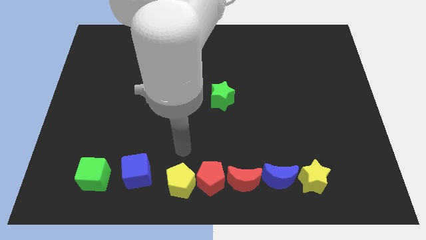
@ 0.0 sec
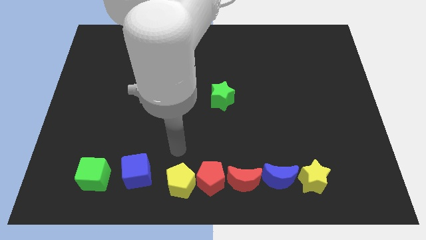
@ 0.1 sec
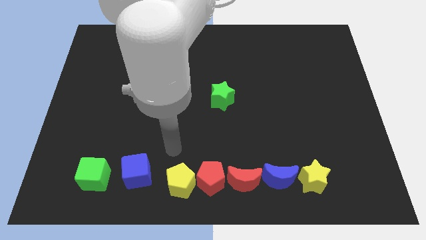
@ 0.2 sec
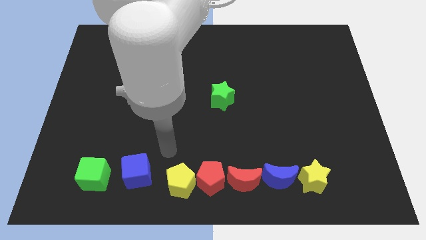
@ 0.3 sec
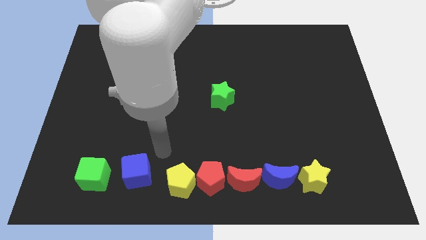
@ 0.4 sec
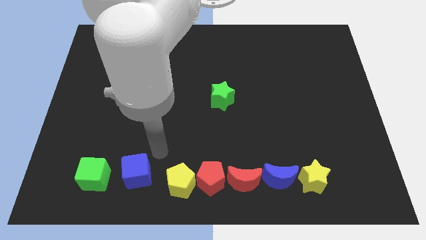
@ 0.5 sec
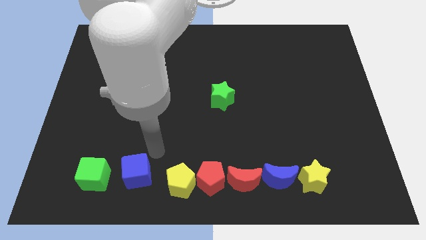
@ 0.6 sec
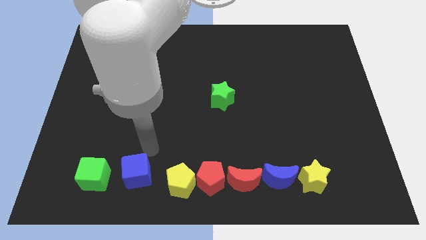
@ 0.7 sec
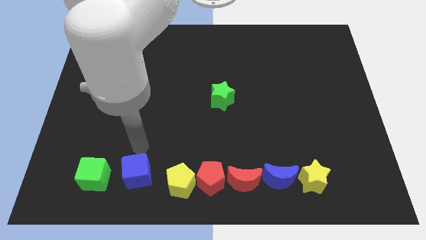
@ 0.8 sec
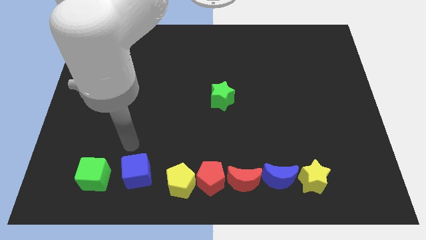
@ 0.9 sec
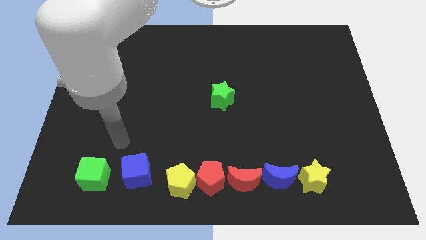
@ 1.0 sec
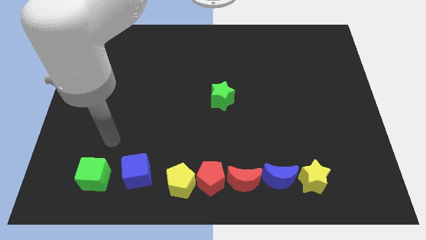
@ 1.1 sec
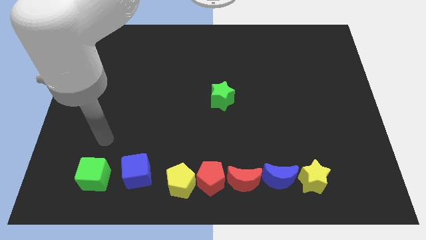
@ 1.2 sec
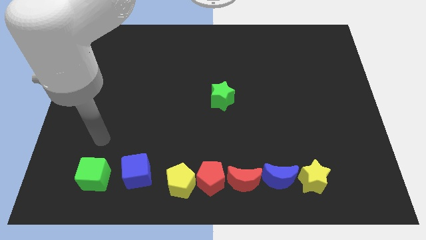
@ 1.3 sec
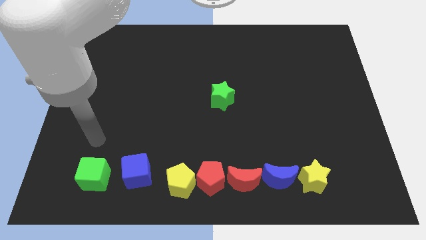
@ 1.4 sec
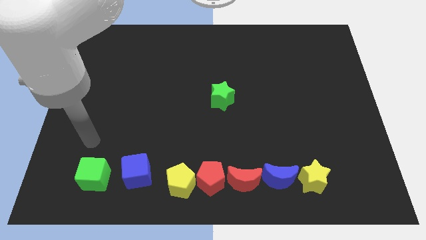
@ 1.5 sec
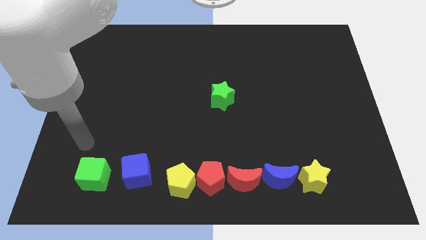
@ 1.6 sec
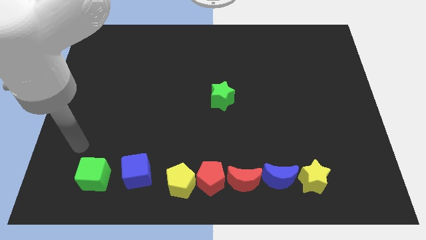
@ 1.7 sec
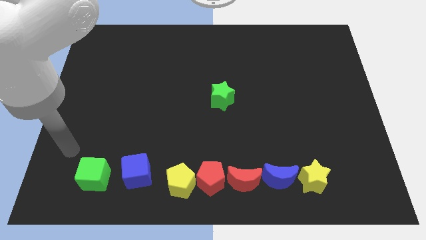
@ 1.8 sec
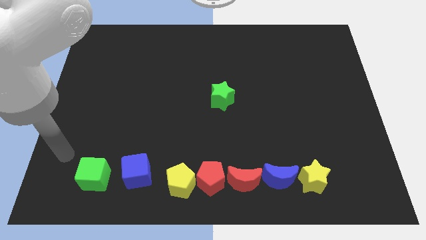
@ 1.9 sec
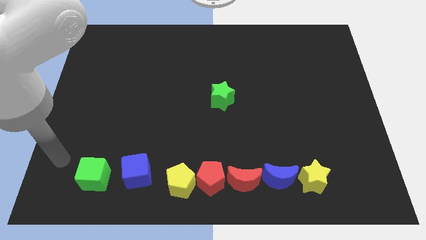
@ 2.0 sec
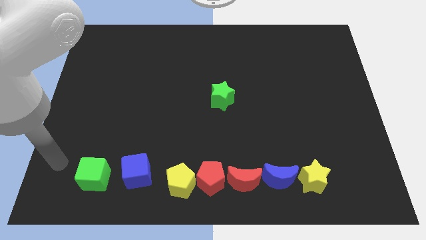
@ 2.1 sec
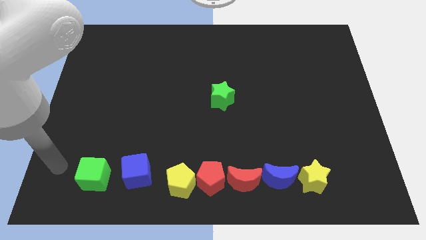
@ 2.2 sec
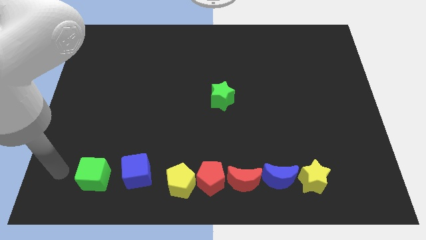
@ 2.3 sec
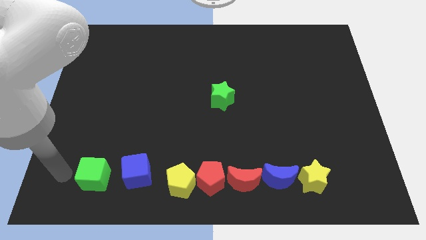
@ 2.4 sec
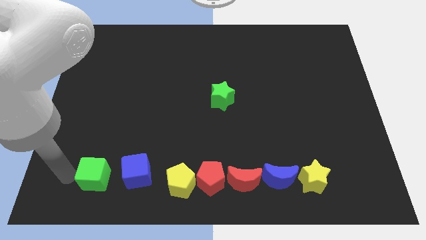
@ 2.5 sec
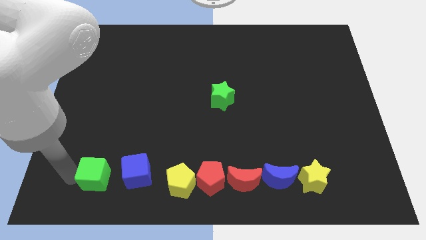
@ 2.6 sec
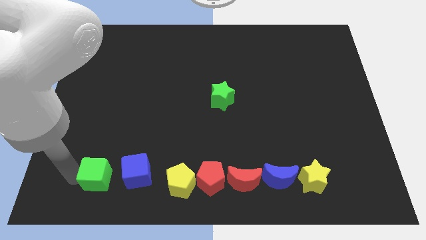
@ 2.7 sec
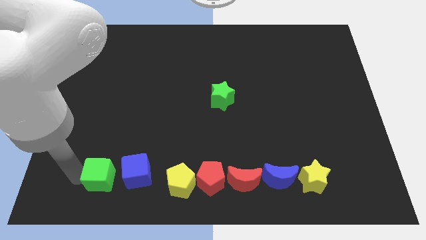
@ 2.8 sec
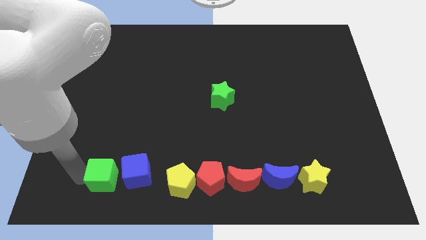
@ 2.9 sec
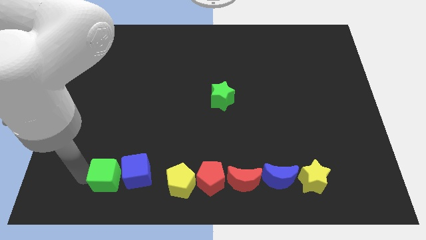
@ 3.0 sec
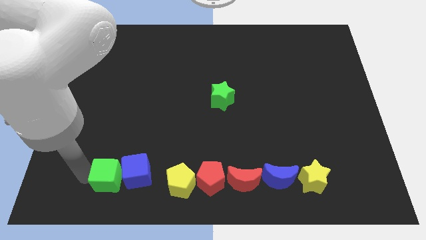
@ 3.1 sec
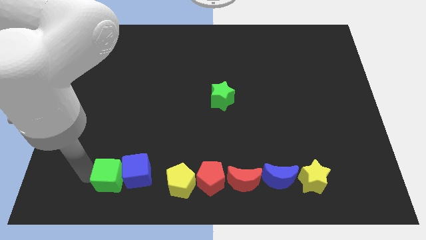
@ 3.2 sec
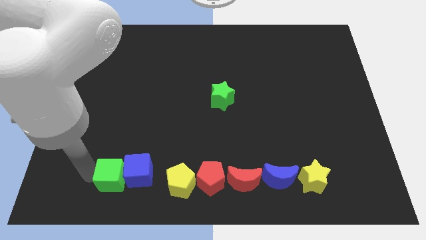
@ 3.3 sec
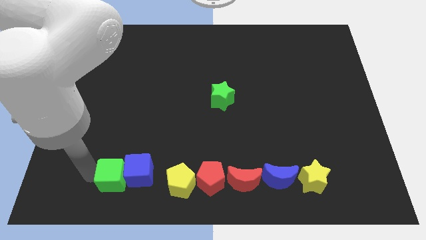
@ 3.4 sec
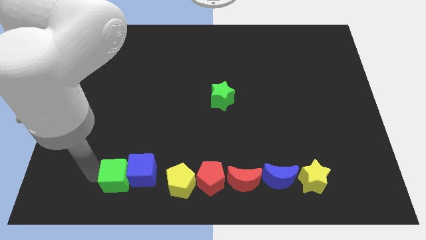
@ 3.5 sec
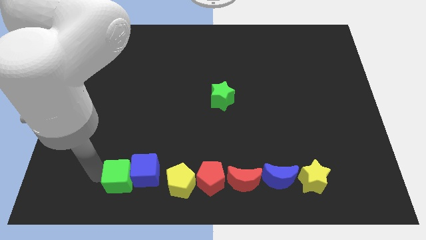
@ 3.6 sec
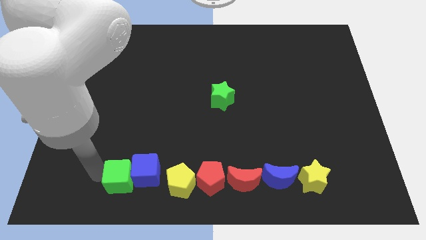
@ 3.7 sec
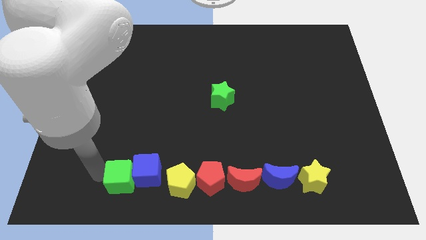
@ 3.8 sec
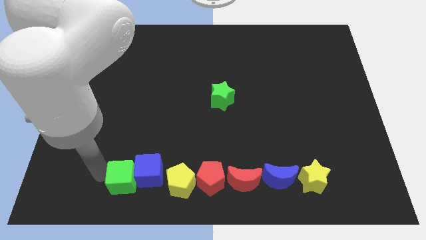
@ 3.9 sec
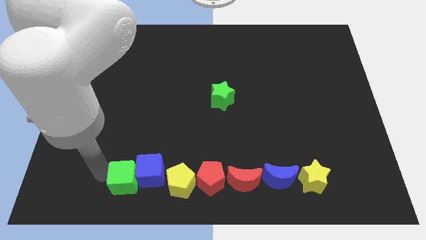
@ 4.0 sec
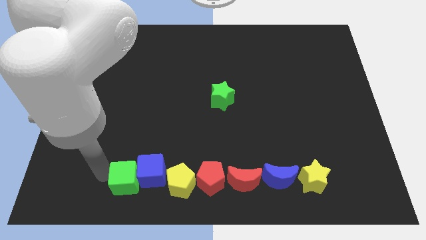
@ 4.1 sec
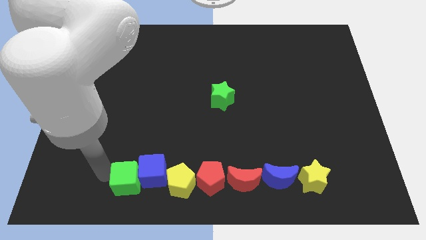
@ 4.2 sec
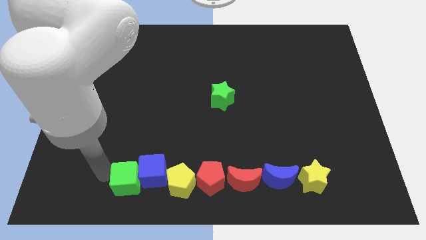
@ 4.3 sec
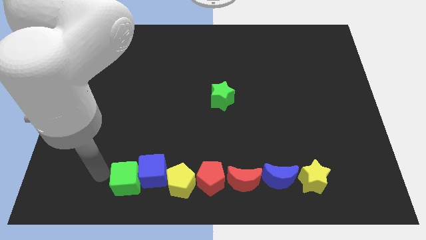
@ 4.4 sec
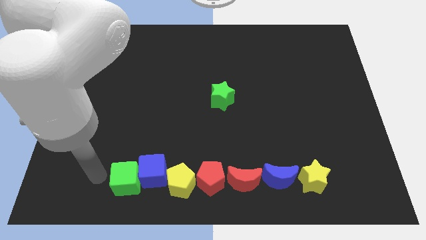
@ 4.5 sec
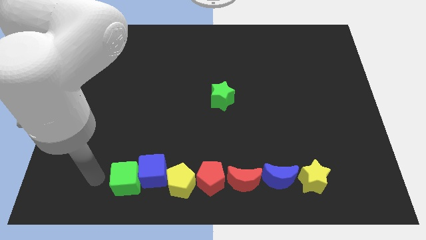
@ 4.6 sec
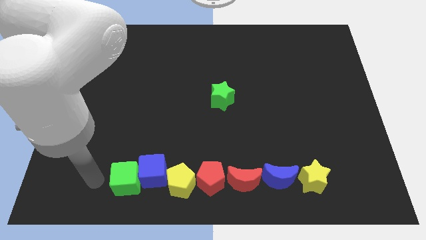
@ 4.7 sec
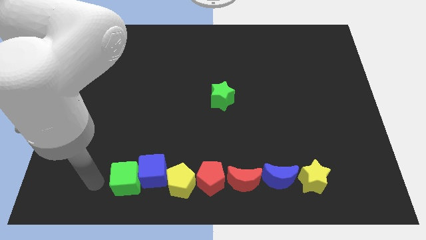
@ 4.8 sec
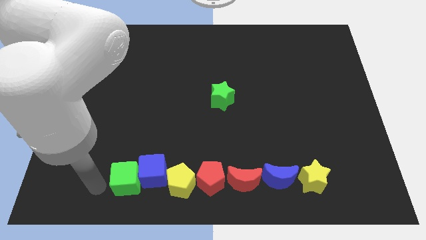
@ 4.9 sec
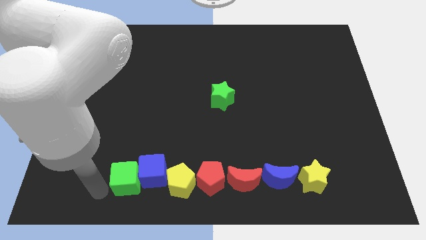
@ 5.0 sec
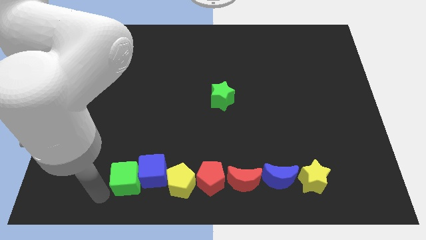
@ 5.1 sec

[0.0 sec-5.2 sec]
push the green cube and the blue cube to the right

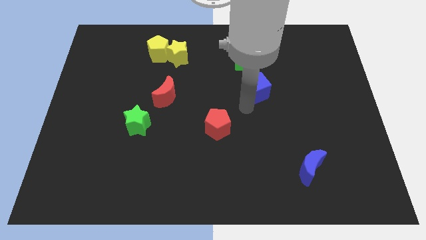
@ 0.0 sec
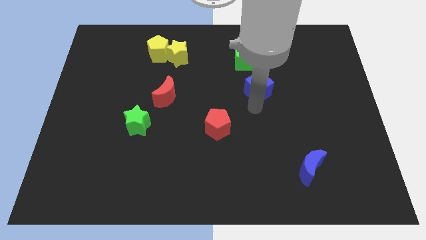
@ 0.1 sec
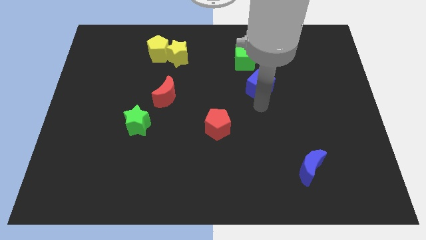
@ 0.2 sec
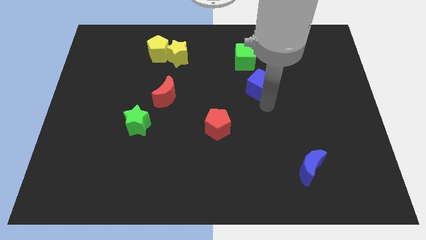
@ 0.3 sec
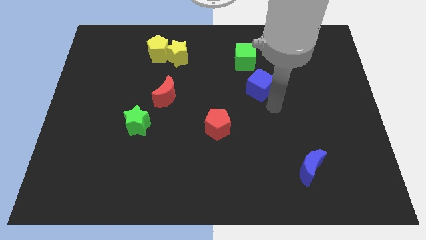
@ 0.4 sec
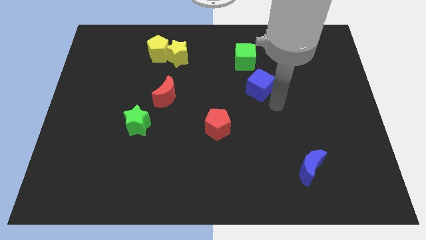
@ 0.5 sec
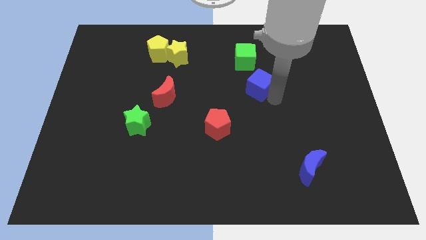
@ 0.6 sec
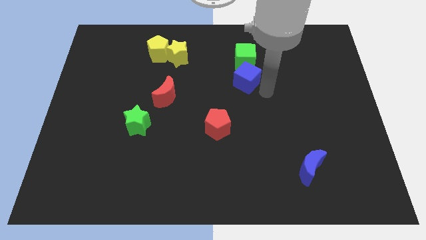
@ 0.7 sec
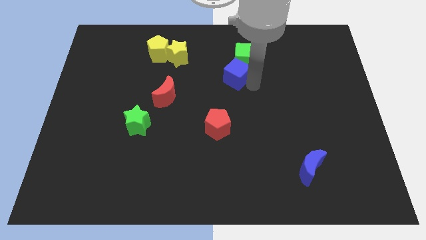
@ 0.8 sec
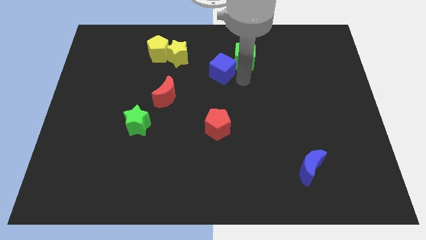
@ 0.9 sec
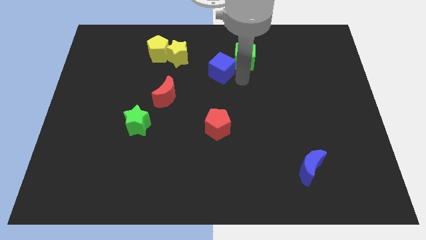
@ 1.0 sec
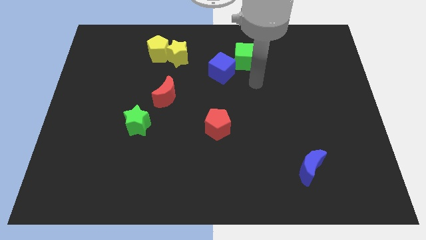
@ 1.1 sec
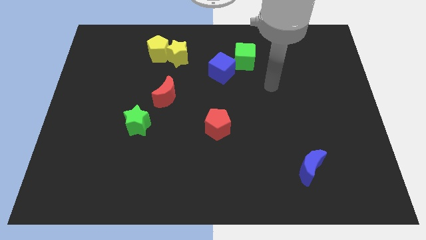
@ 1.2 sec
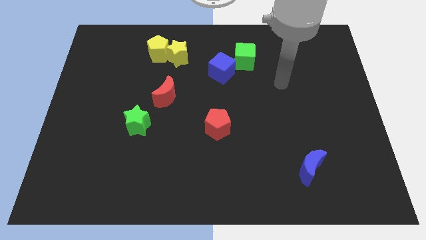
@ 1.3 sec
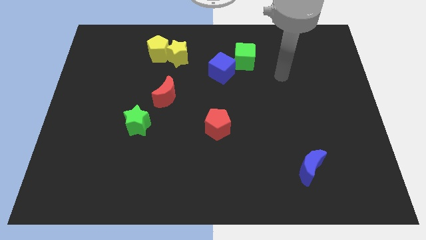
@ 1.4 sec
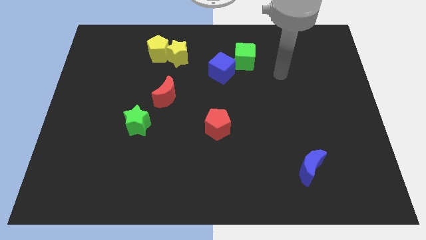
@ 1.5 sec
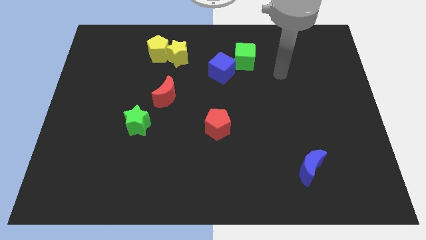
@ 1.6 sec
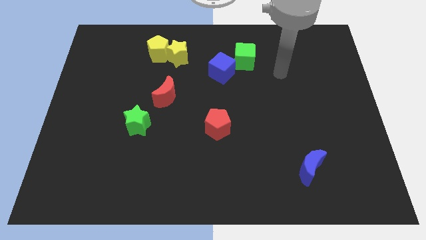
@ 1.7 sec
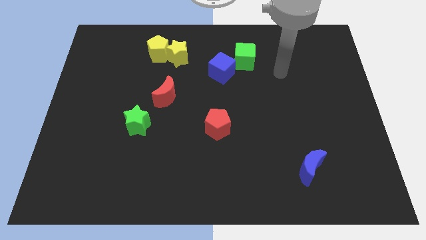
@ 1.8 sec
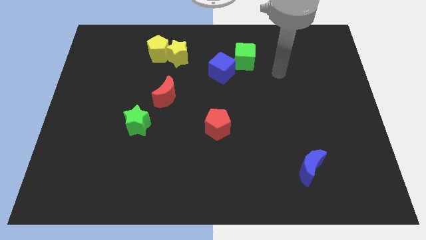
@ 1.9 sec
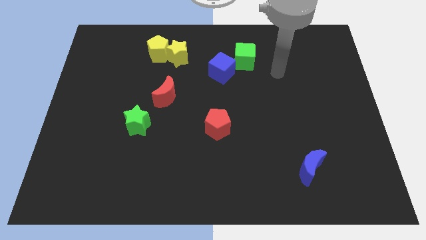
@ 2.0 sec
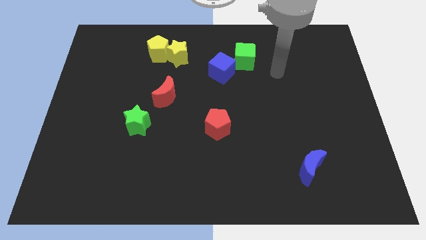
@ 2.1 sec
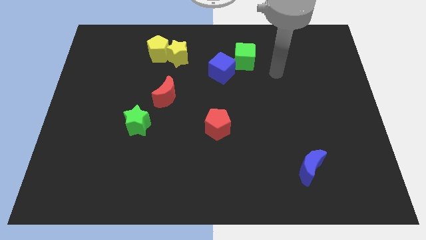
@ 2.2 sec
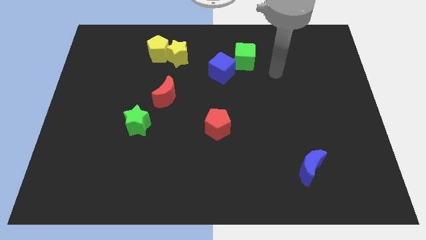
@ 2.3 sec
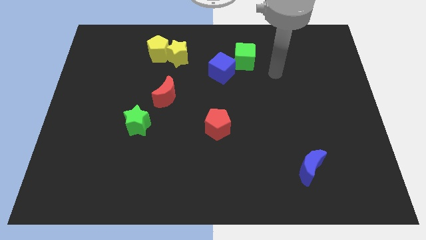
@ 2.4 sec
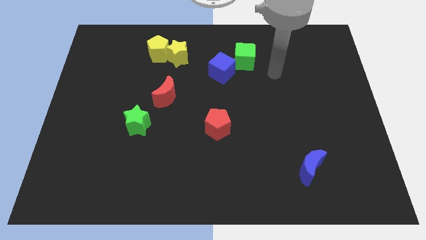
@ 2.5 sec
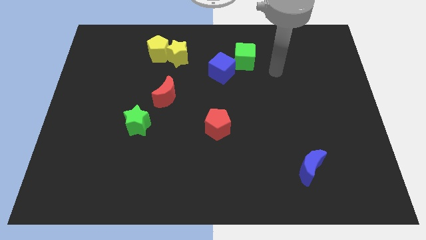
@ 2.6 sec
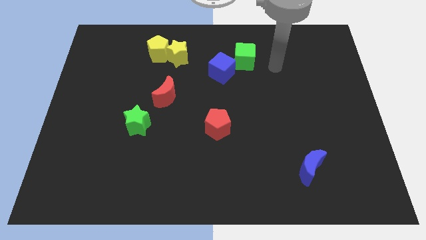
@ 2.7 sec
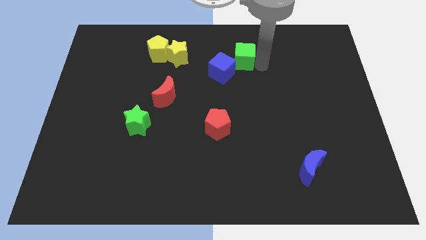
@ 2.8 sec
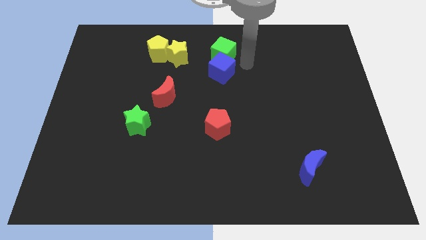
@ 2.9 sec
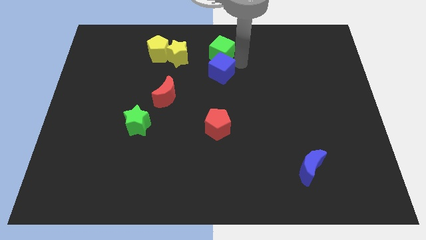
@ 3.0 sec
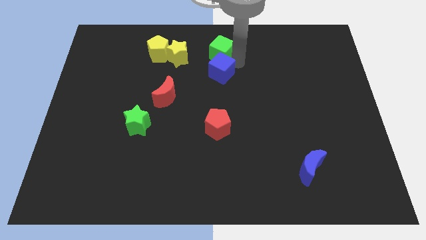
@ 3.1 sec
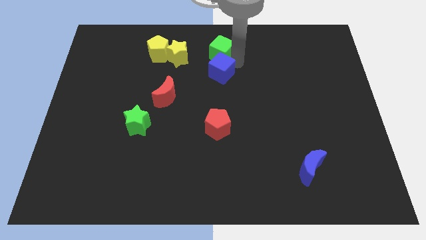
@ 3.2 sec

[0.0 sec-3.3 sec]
place the green cube and blue cube to the right of the yellow star

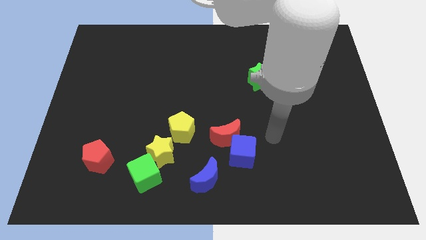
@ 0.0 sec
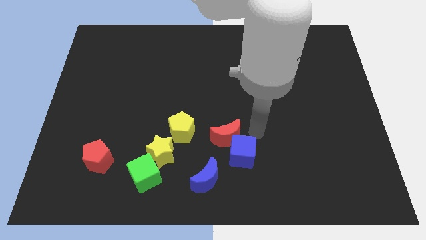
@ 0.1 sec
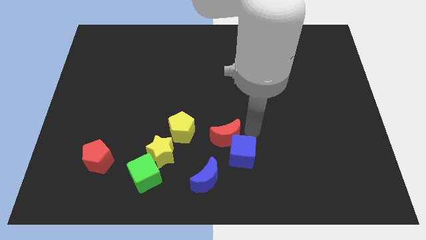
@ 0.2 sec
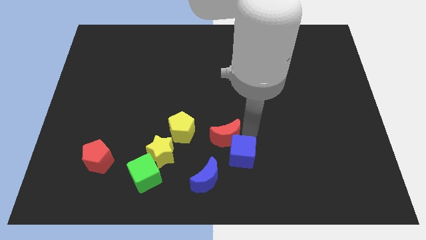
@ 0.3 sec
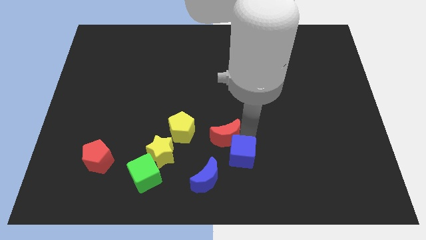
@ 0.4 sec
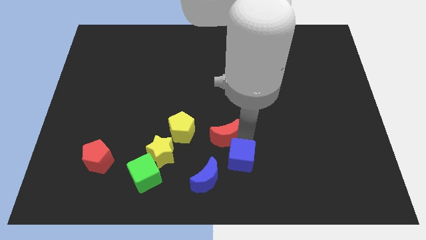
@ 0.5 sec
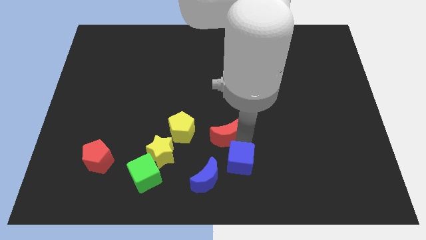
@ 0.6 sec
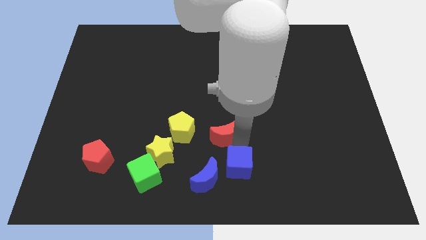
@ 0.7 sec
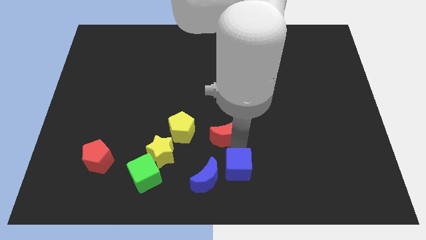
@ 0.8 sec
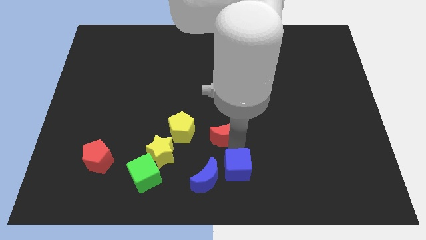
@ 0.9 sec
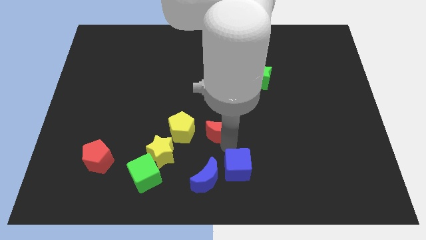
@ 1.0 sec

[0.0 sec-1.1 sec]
place your hand in between blue cube and red moon
